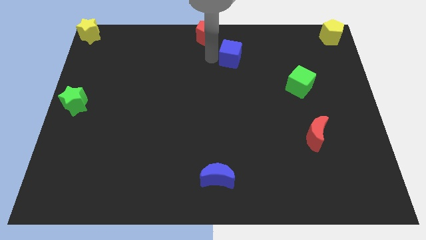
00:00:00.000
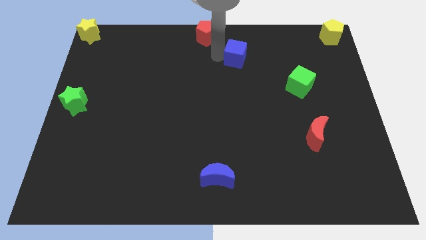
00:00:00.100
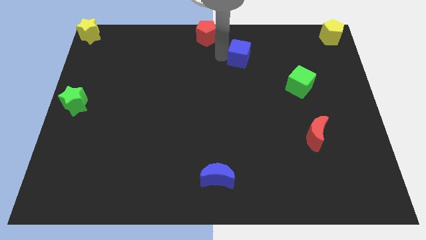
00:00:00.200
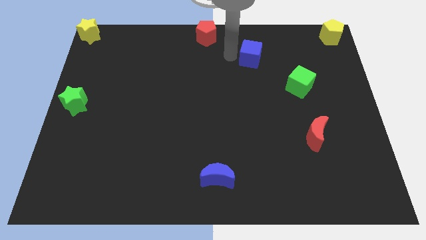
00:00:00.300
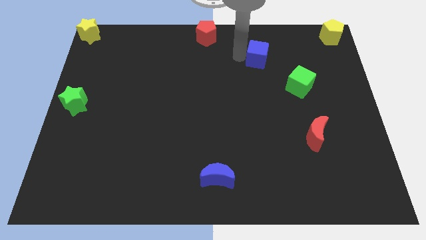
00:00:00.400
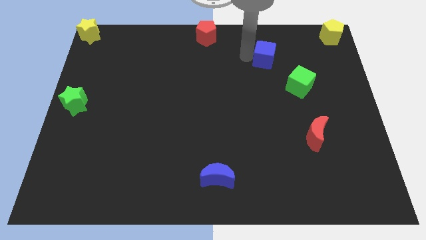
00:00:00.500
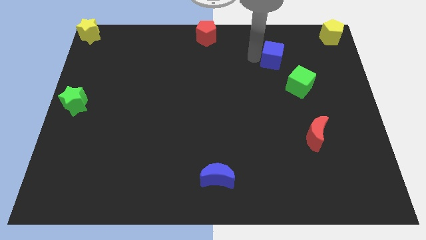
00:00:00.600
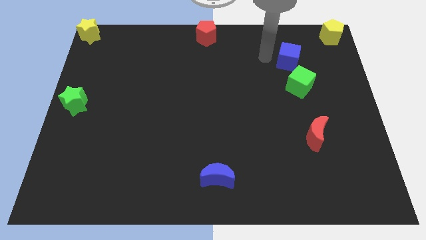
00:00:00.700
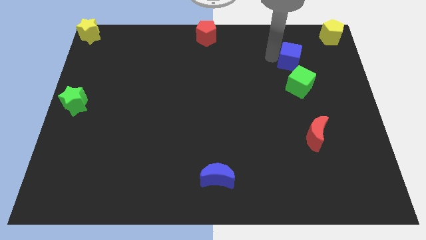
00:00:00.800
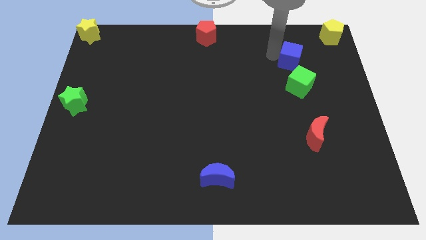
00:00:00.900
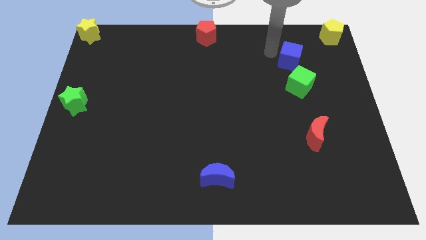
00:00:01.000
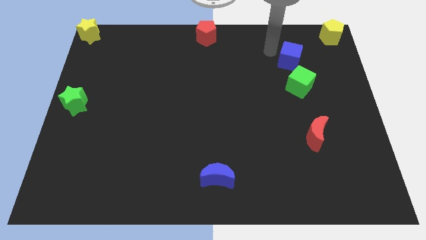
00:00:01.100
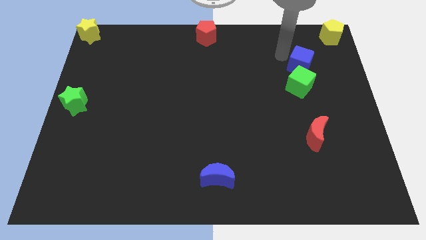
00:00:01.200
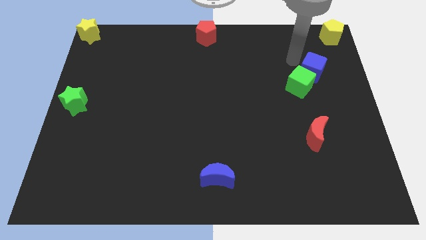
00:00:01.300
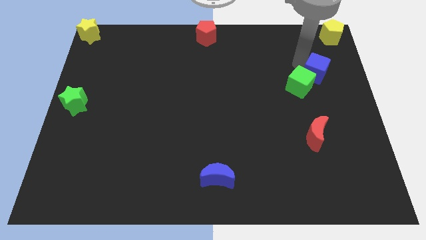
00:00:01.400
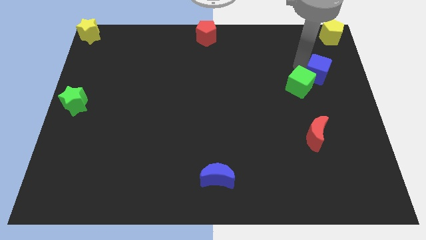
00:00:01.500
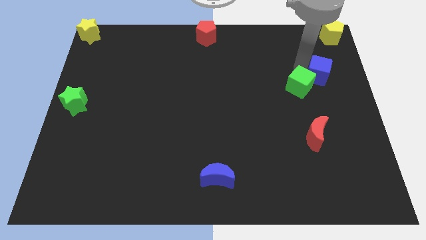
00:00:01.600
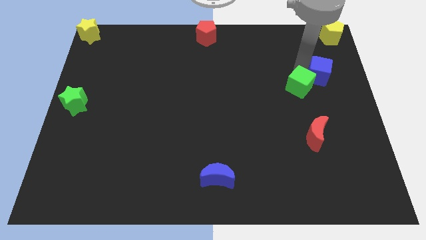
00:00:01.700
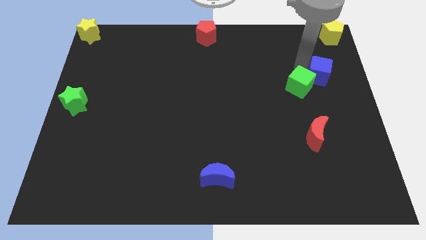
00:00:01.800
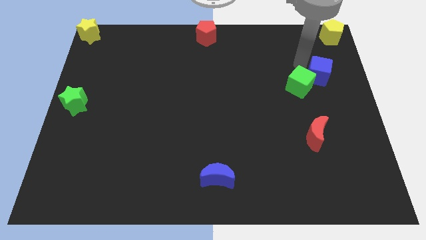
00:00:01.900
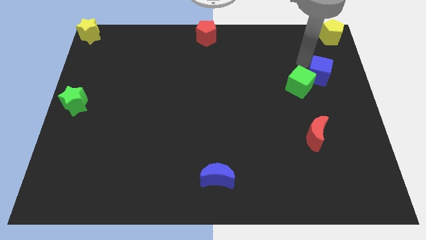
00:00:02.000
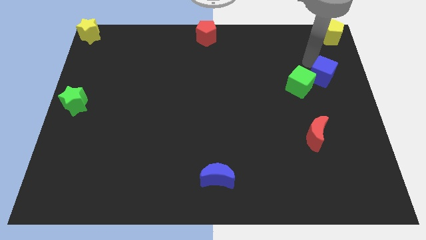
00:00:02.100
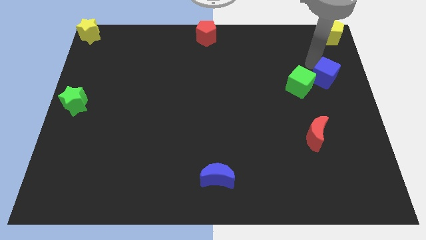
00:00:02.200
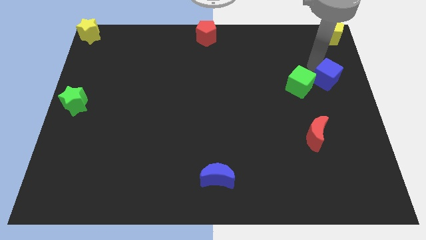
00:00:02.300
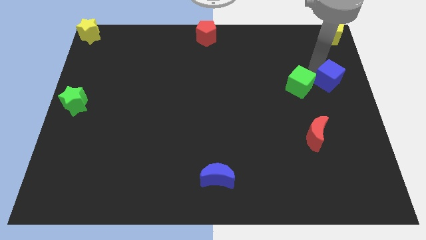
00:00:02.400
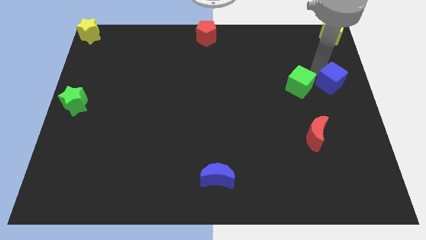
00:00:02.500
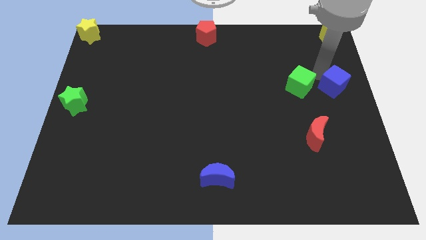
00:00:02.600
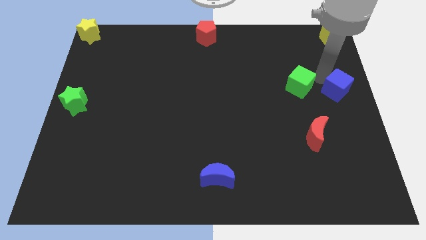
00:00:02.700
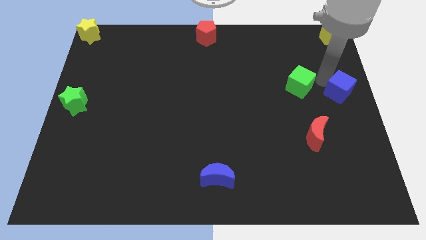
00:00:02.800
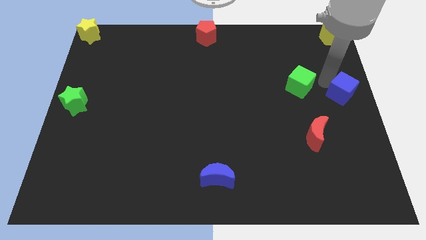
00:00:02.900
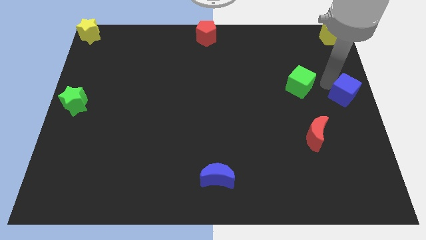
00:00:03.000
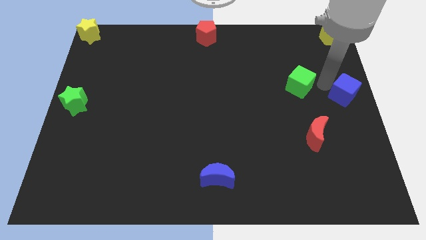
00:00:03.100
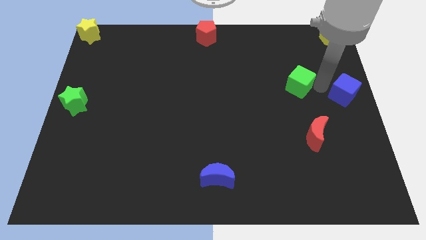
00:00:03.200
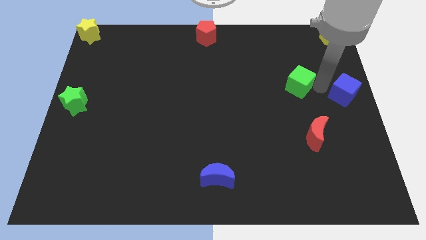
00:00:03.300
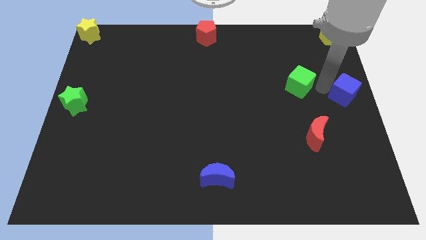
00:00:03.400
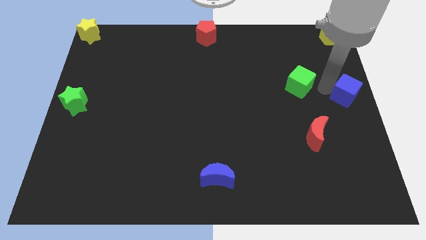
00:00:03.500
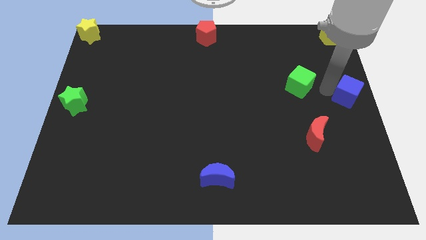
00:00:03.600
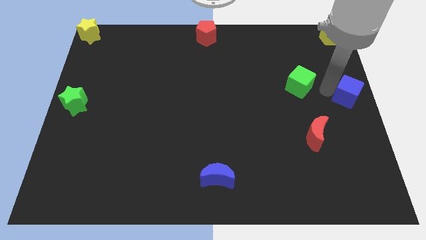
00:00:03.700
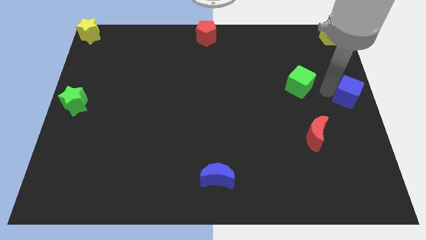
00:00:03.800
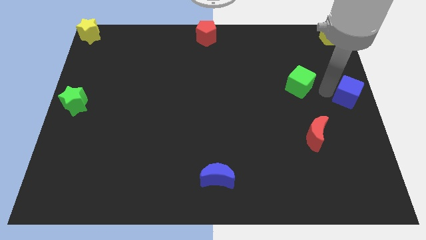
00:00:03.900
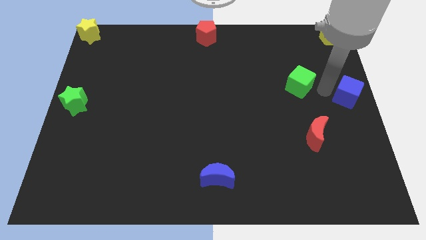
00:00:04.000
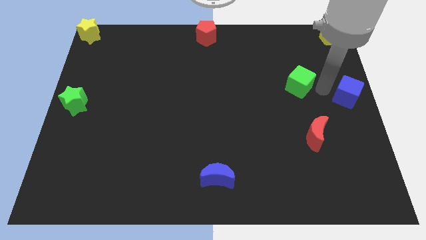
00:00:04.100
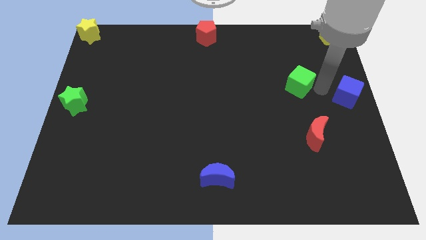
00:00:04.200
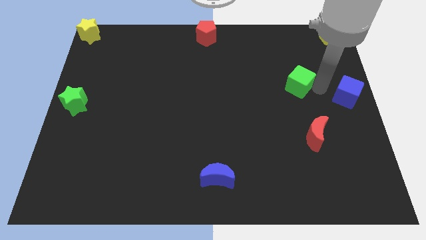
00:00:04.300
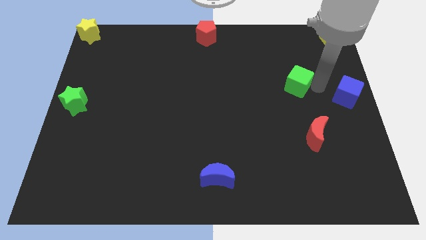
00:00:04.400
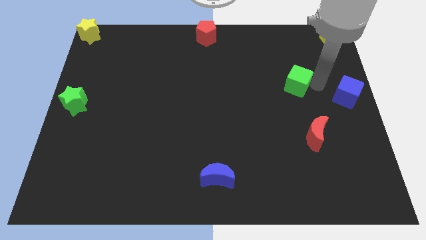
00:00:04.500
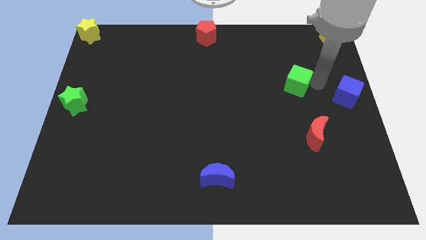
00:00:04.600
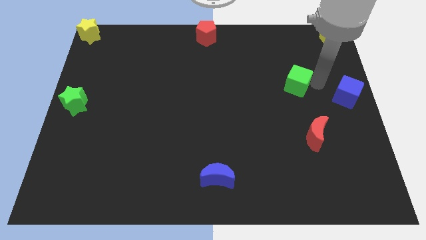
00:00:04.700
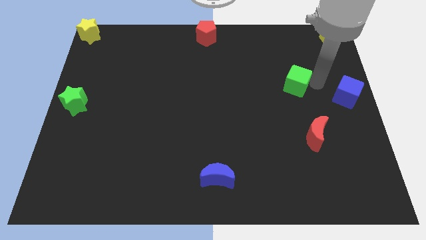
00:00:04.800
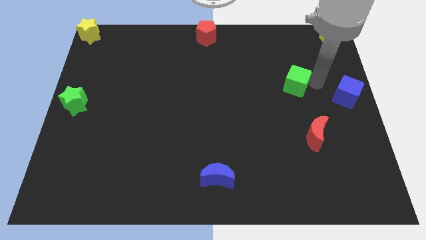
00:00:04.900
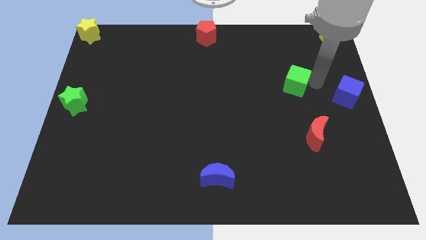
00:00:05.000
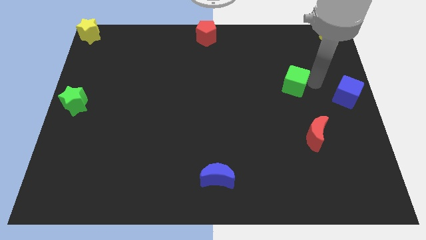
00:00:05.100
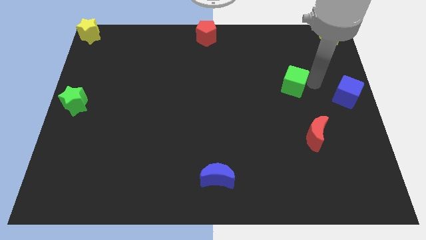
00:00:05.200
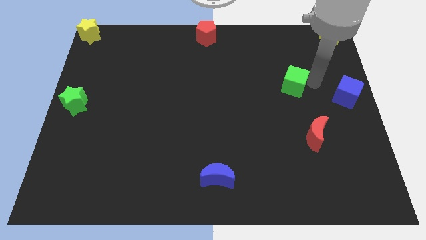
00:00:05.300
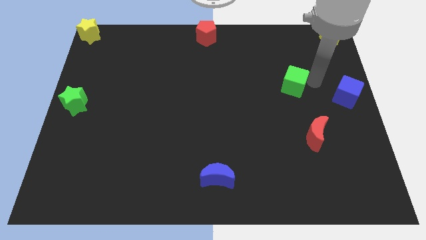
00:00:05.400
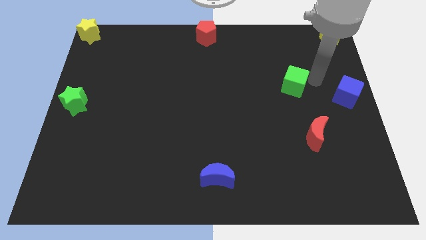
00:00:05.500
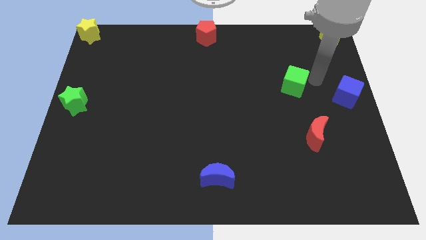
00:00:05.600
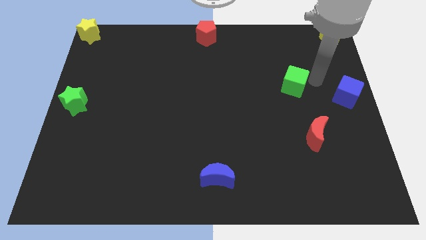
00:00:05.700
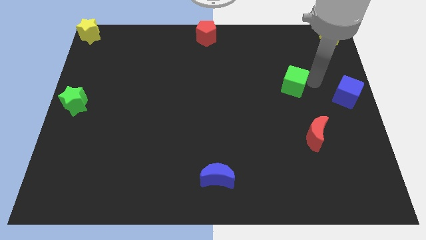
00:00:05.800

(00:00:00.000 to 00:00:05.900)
push the blue cube to the right side of the board

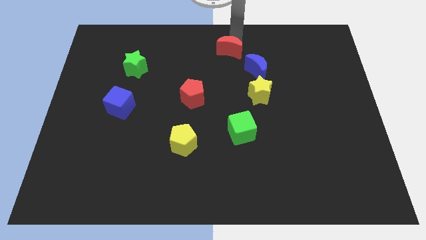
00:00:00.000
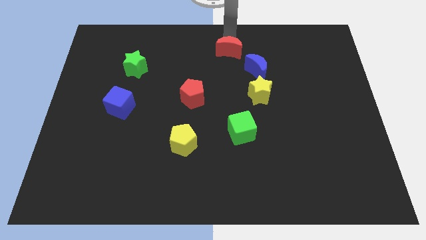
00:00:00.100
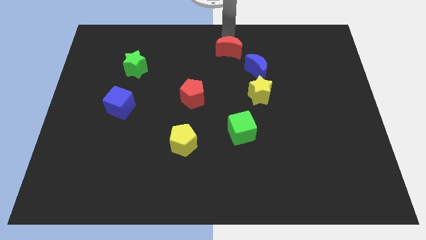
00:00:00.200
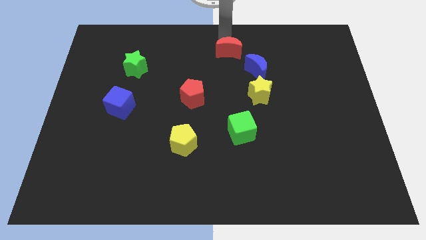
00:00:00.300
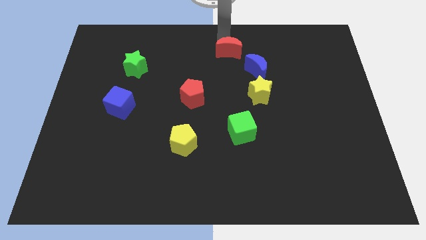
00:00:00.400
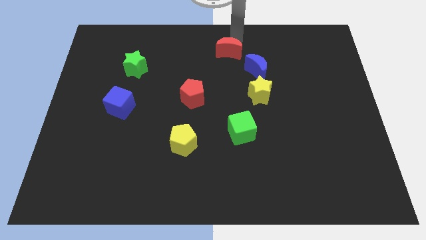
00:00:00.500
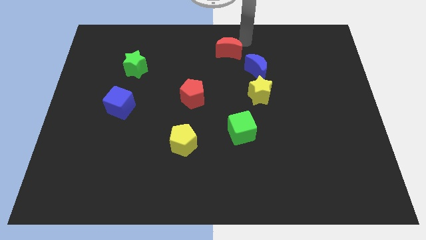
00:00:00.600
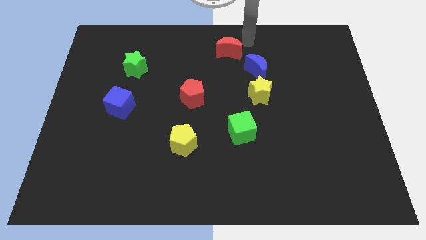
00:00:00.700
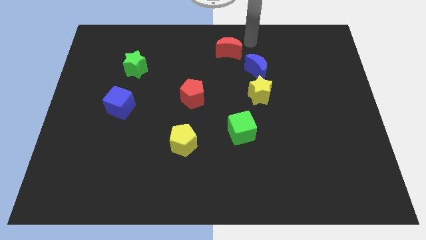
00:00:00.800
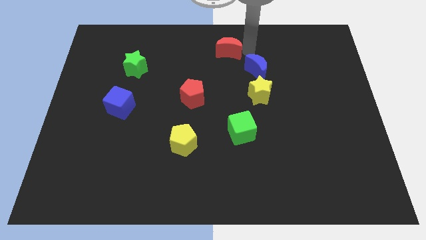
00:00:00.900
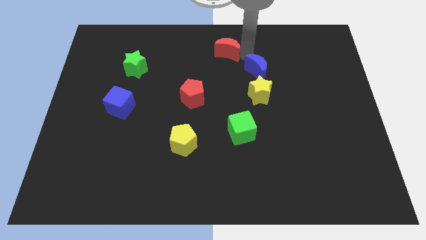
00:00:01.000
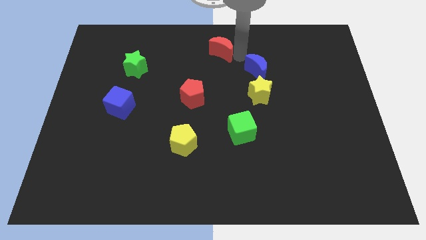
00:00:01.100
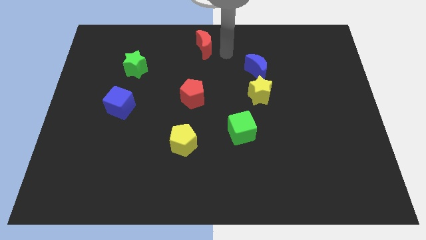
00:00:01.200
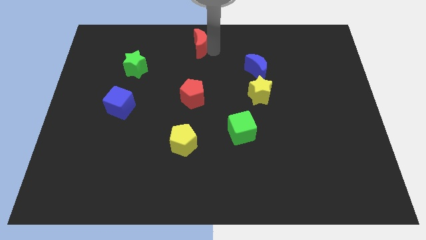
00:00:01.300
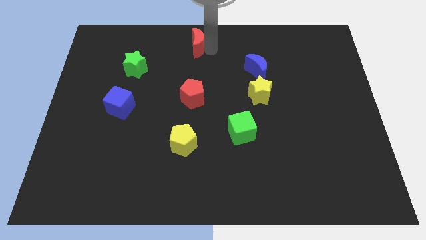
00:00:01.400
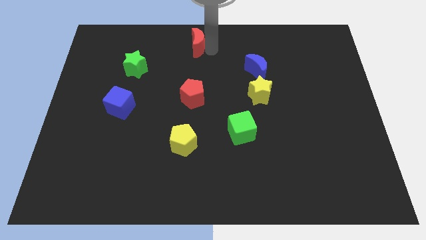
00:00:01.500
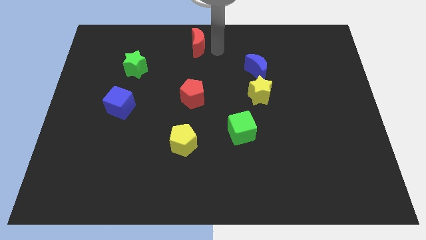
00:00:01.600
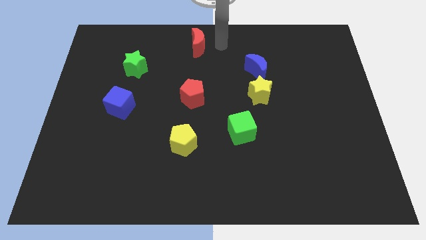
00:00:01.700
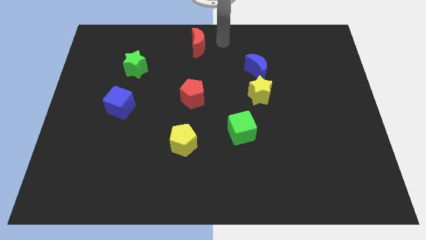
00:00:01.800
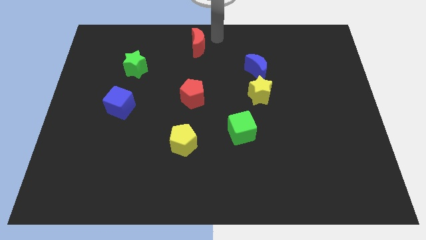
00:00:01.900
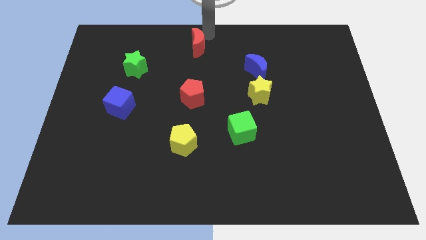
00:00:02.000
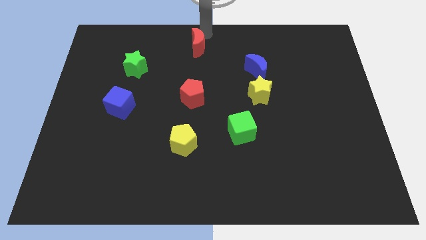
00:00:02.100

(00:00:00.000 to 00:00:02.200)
push red moon to the top center

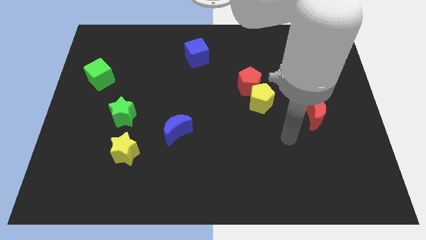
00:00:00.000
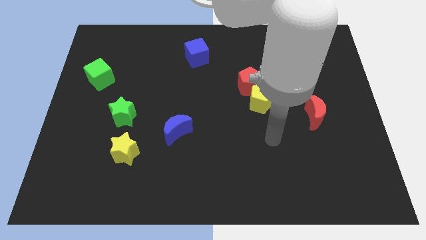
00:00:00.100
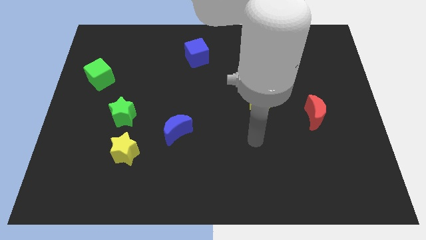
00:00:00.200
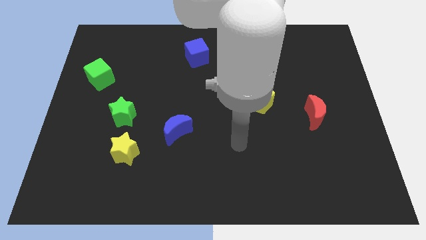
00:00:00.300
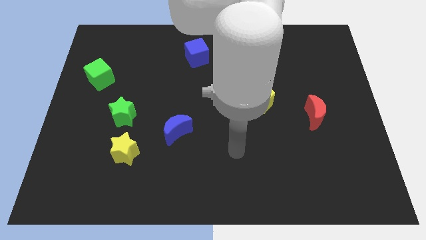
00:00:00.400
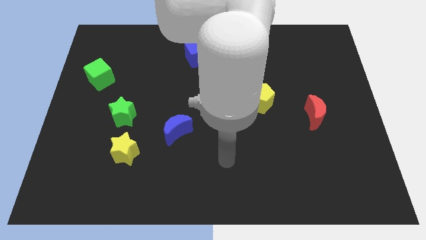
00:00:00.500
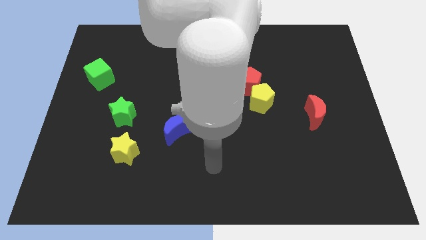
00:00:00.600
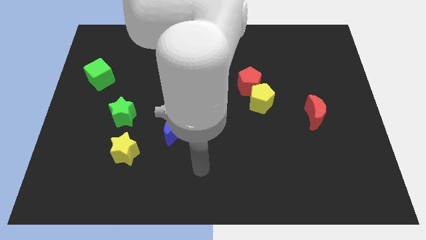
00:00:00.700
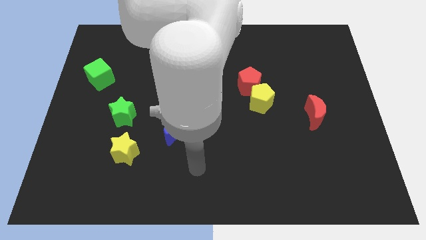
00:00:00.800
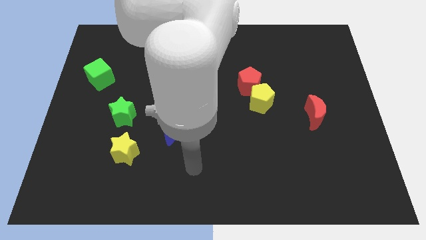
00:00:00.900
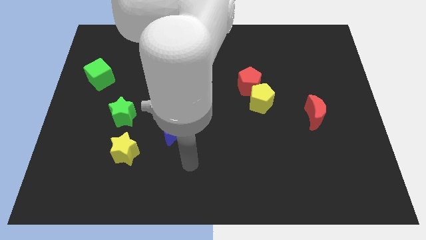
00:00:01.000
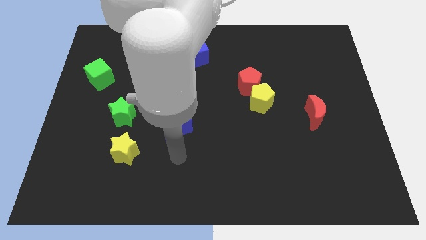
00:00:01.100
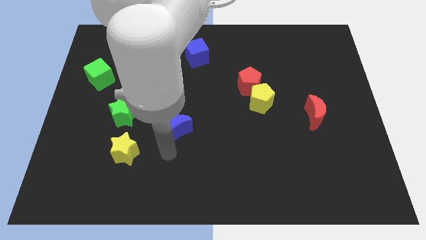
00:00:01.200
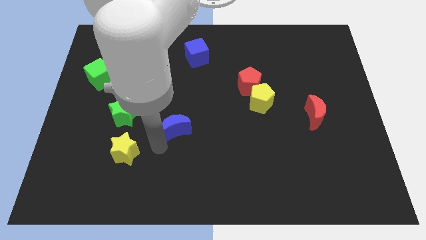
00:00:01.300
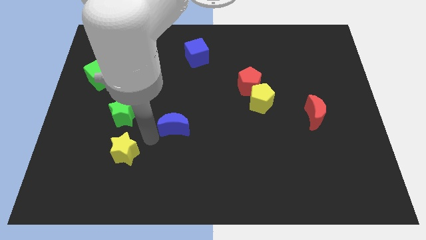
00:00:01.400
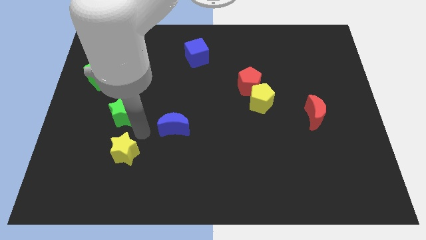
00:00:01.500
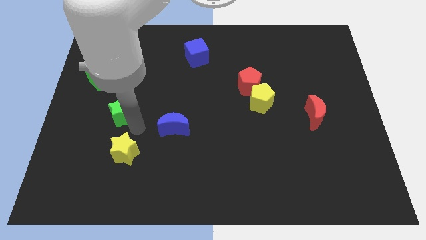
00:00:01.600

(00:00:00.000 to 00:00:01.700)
move your arm towards the green star
